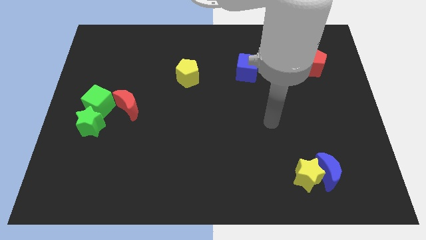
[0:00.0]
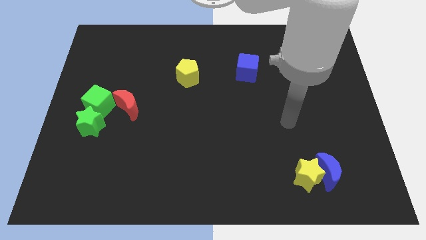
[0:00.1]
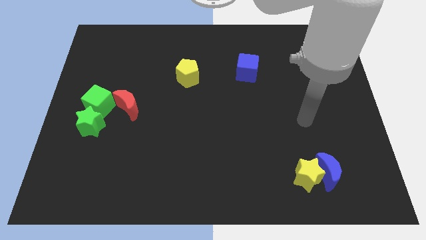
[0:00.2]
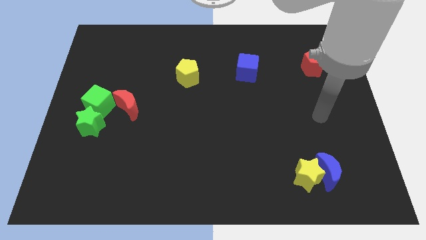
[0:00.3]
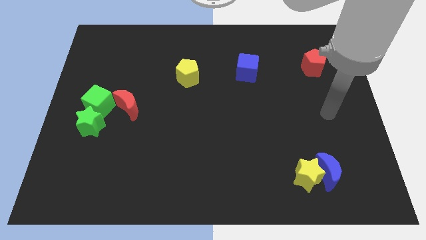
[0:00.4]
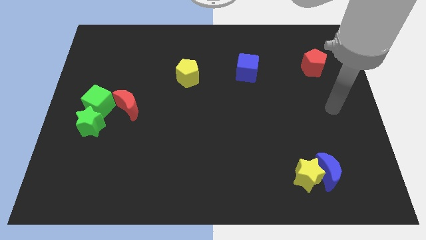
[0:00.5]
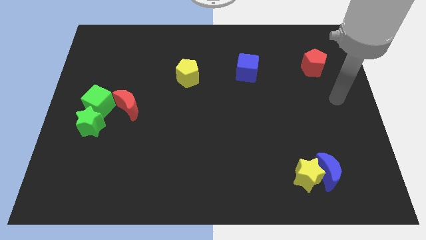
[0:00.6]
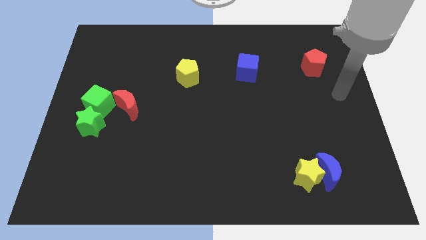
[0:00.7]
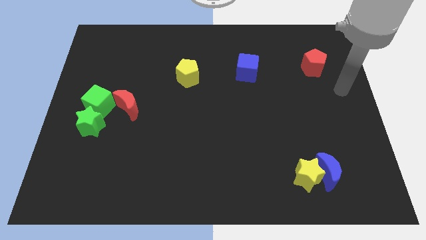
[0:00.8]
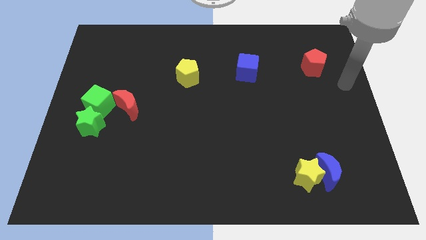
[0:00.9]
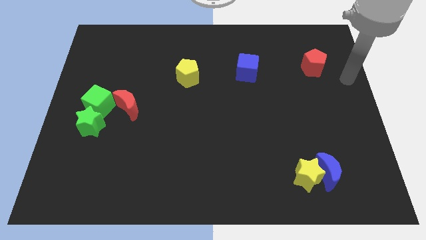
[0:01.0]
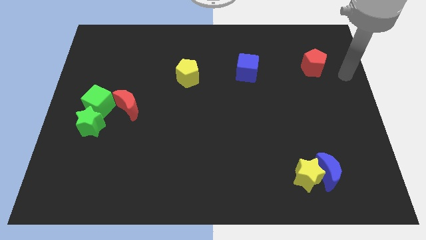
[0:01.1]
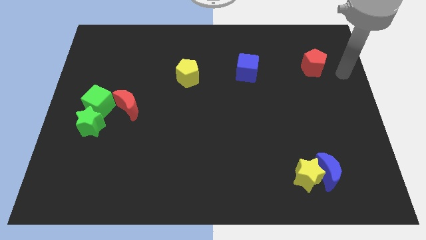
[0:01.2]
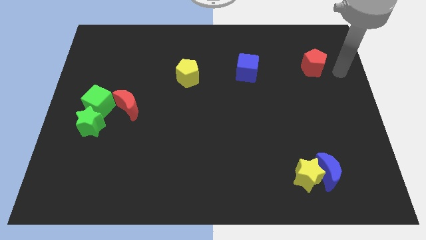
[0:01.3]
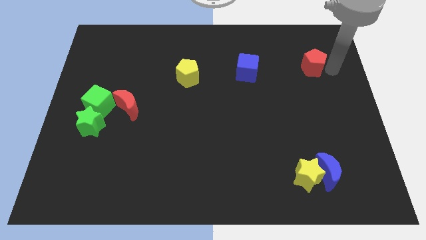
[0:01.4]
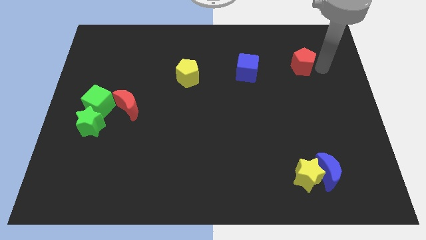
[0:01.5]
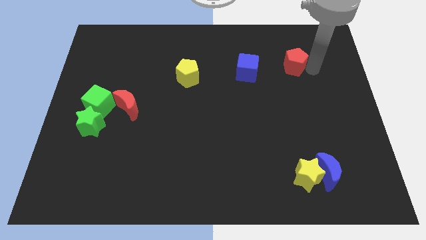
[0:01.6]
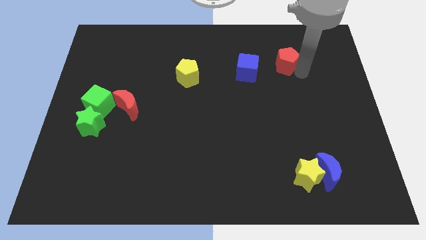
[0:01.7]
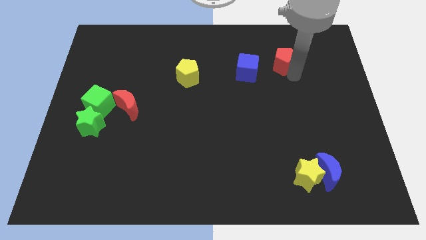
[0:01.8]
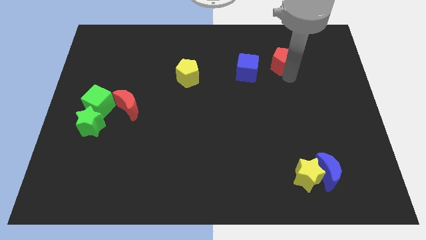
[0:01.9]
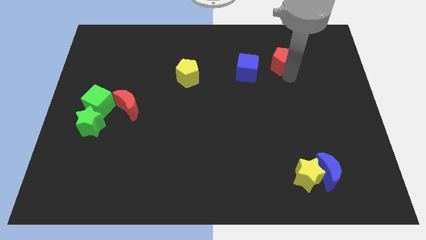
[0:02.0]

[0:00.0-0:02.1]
push red pentagon closer to the blue cube

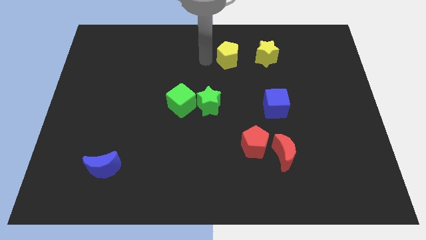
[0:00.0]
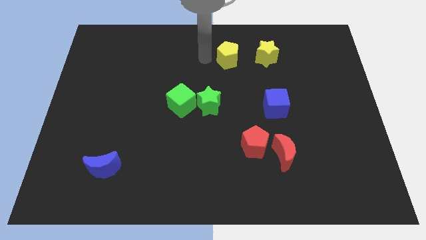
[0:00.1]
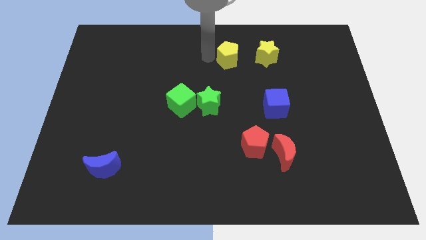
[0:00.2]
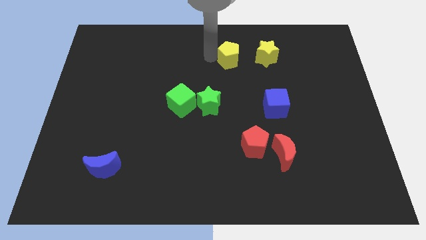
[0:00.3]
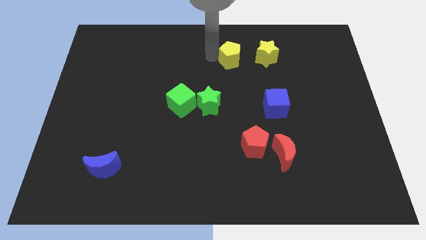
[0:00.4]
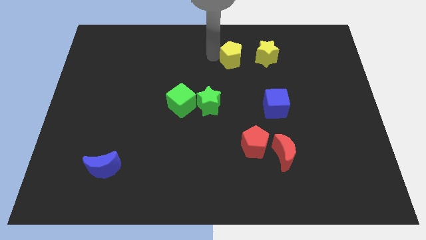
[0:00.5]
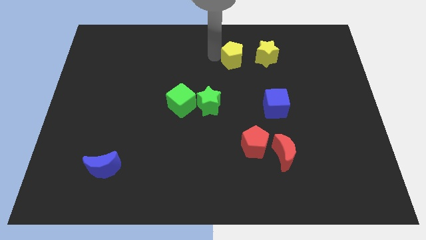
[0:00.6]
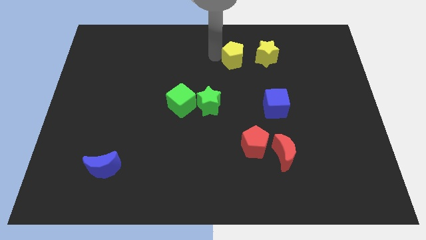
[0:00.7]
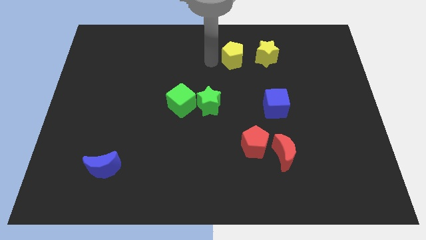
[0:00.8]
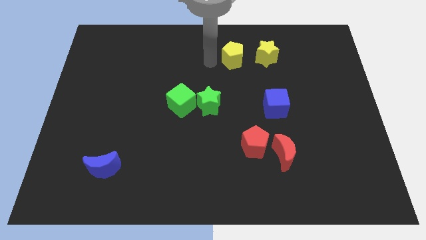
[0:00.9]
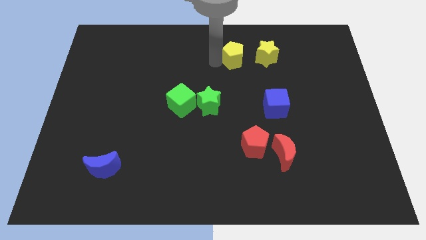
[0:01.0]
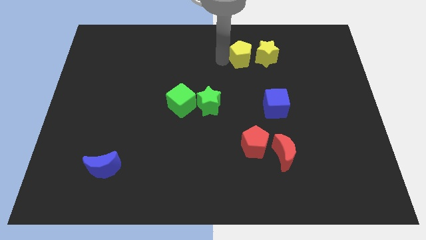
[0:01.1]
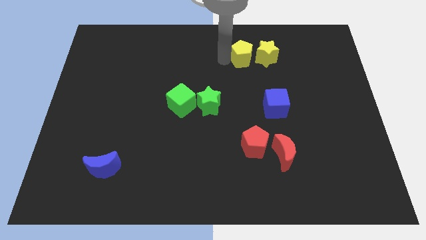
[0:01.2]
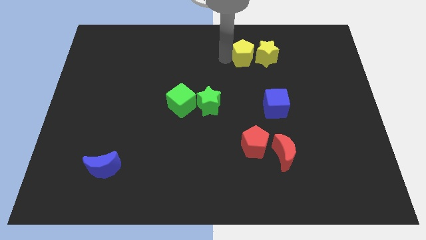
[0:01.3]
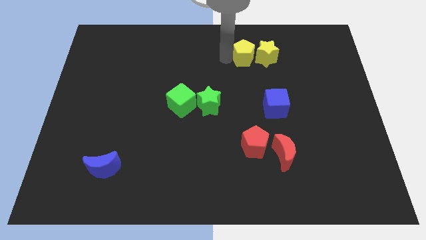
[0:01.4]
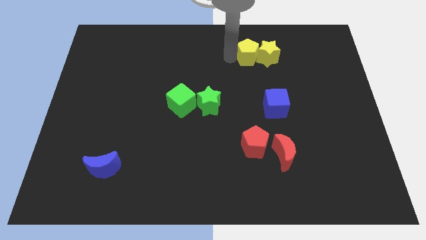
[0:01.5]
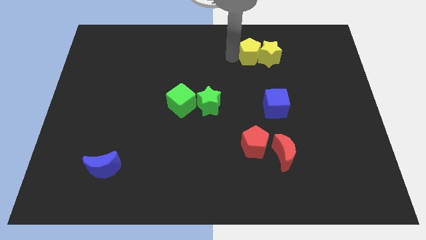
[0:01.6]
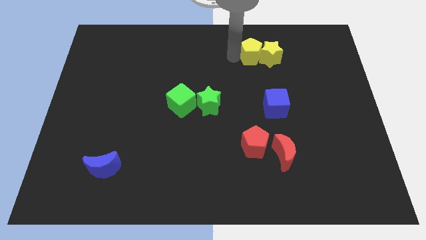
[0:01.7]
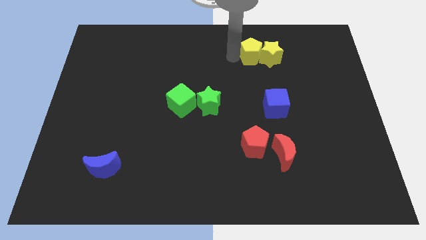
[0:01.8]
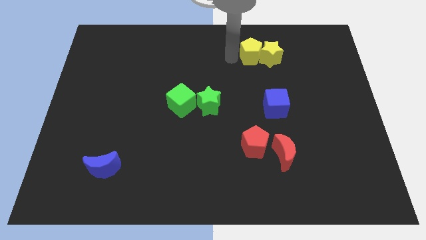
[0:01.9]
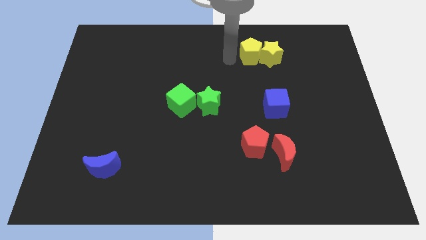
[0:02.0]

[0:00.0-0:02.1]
push the yellow pentagon close to the yellow star

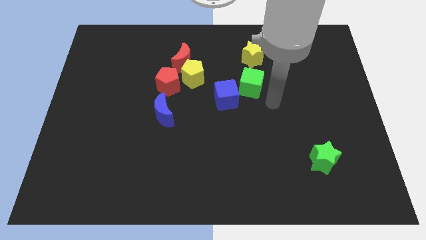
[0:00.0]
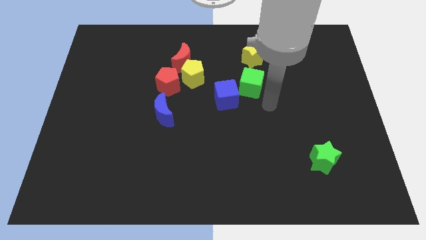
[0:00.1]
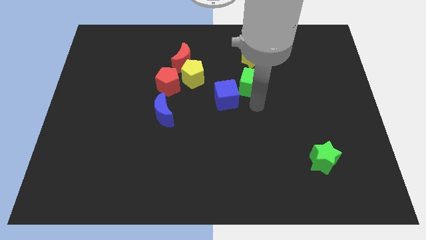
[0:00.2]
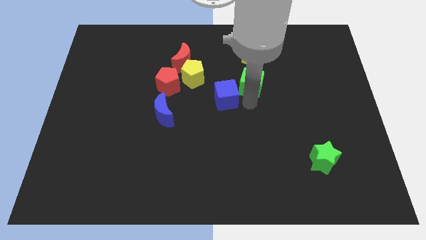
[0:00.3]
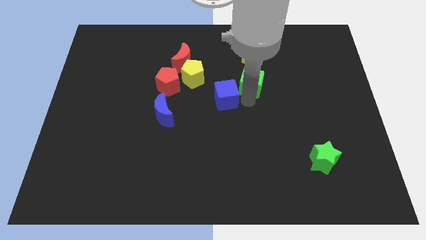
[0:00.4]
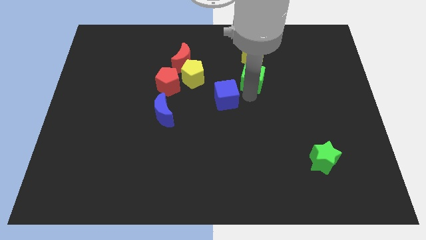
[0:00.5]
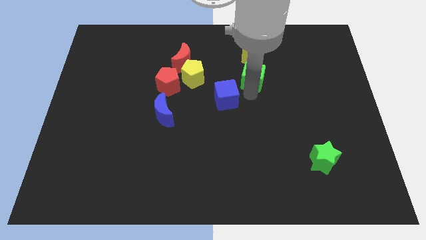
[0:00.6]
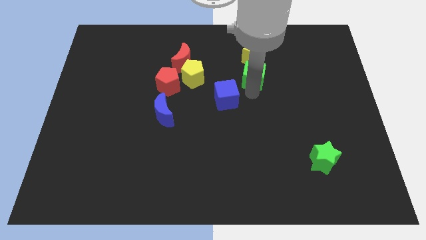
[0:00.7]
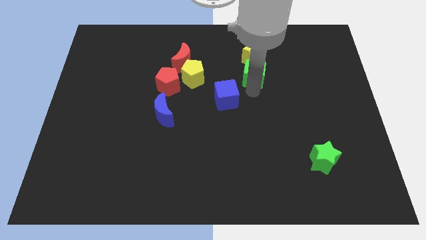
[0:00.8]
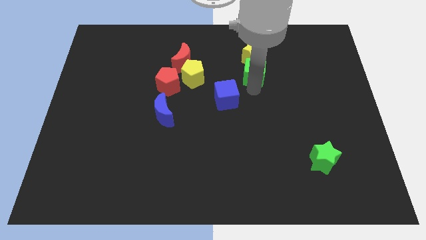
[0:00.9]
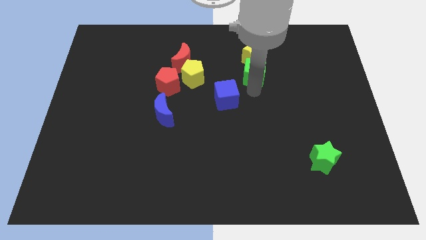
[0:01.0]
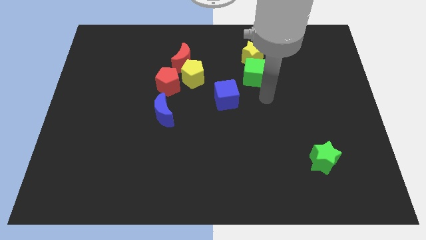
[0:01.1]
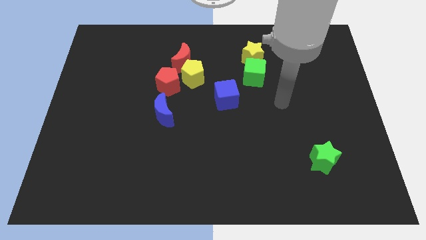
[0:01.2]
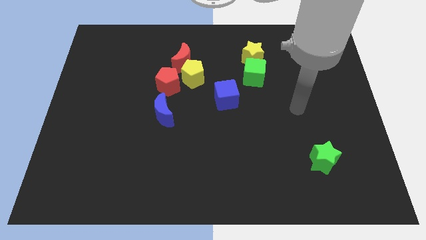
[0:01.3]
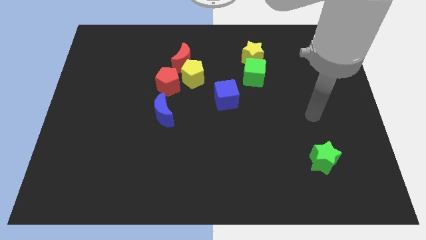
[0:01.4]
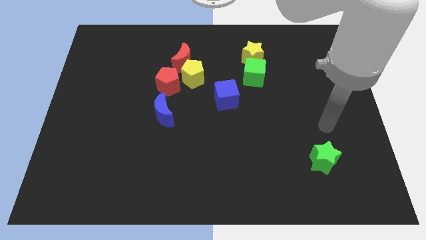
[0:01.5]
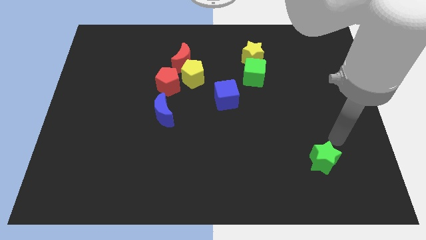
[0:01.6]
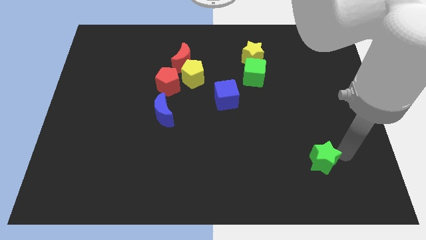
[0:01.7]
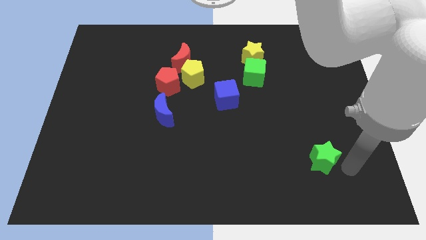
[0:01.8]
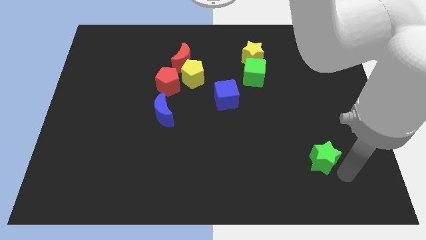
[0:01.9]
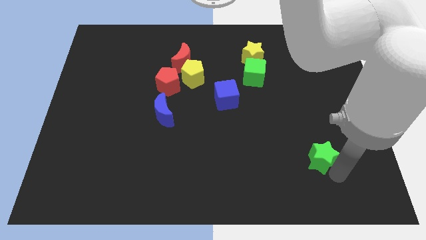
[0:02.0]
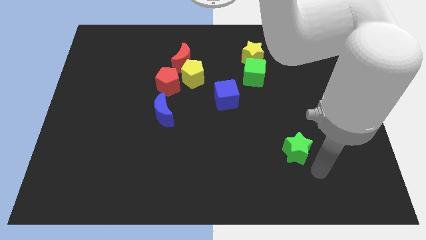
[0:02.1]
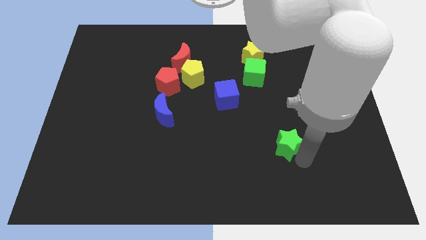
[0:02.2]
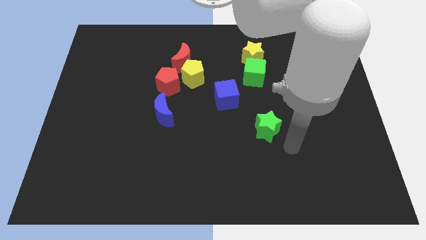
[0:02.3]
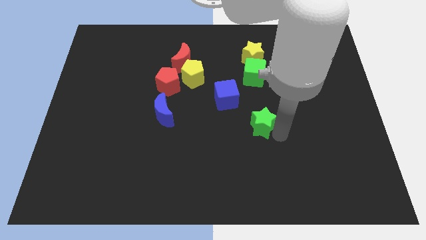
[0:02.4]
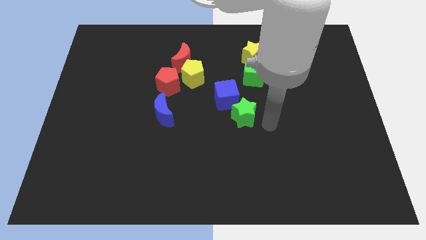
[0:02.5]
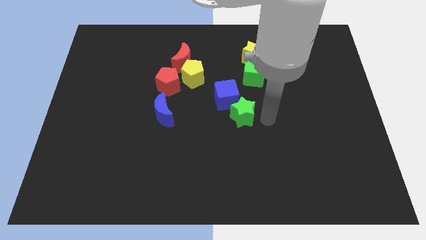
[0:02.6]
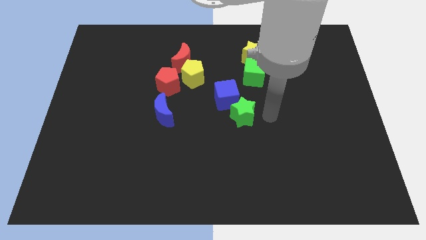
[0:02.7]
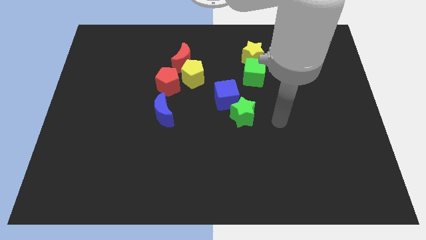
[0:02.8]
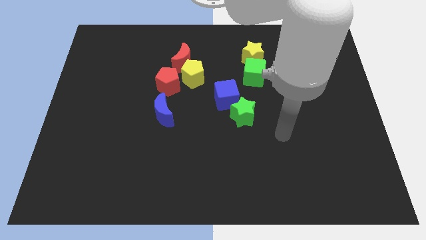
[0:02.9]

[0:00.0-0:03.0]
move the green star towards the blue cube

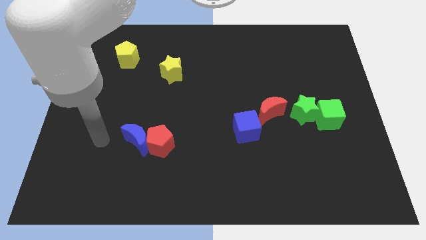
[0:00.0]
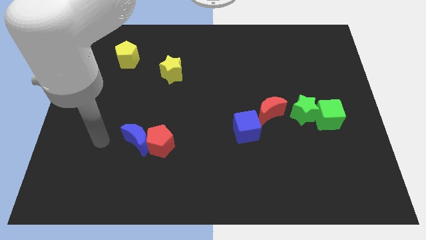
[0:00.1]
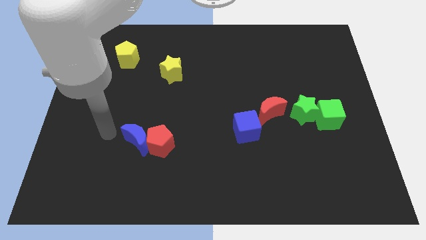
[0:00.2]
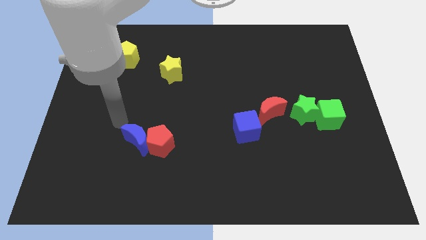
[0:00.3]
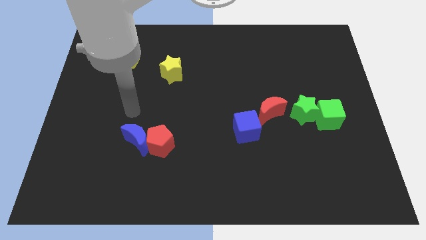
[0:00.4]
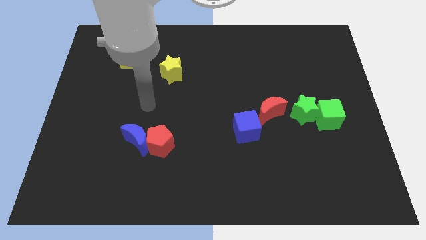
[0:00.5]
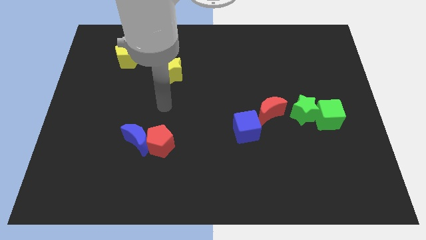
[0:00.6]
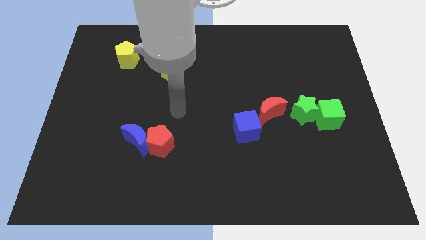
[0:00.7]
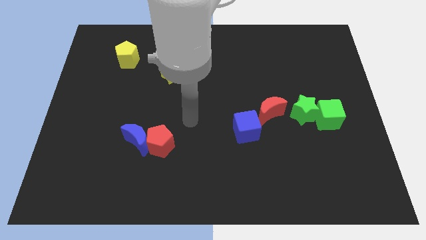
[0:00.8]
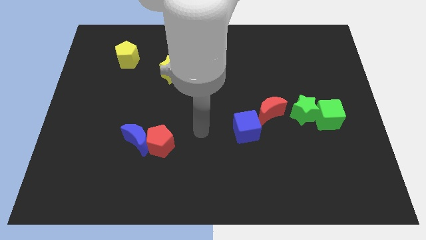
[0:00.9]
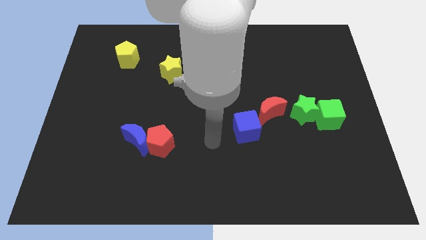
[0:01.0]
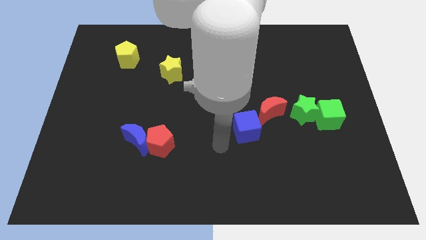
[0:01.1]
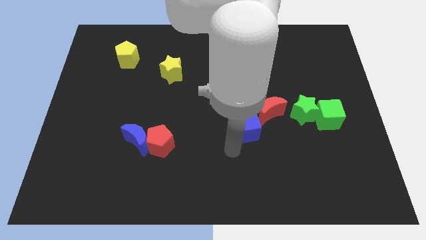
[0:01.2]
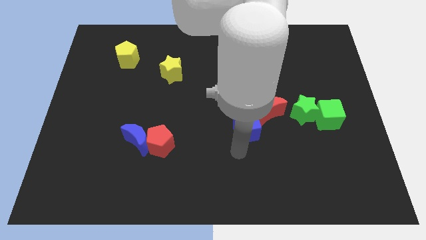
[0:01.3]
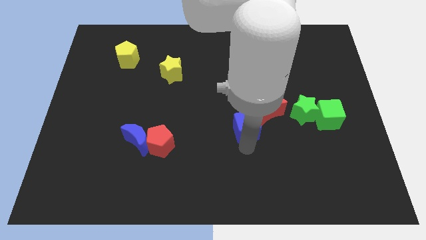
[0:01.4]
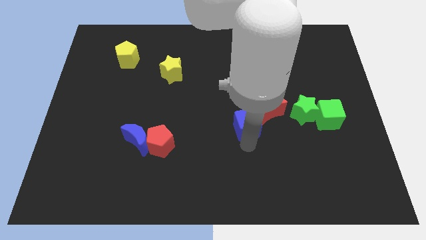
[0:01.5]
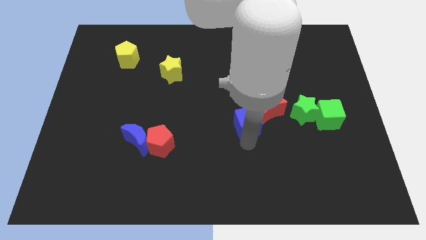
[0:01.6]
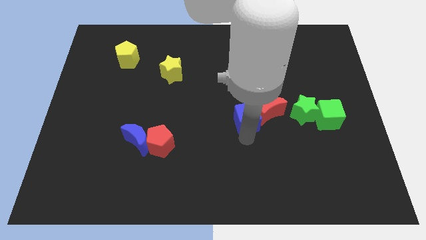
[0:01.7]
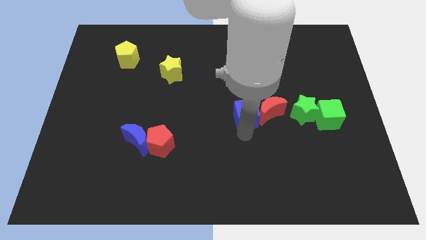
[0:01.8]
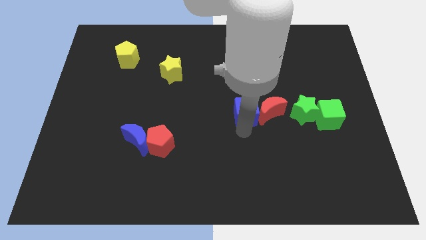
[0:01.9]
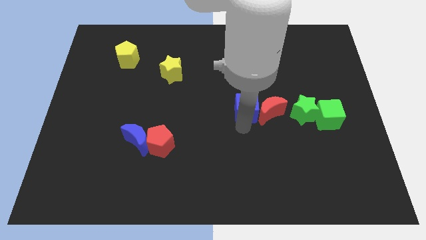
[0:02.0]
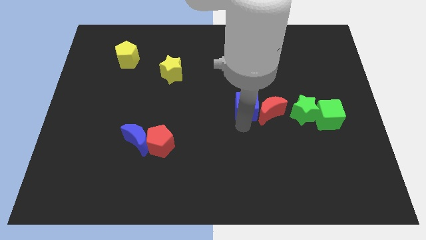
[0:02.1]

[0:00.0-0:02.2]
move the blue cube slightly up
